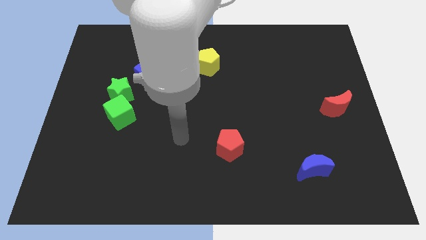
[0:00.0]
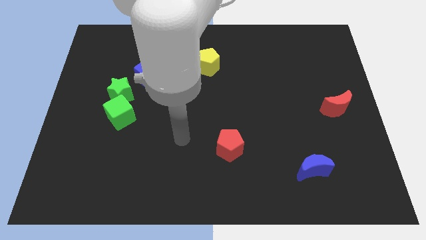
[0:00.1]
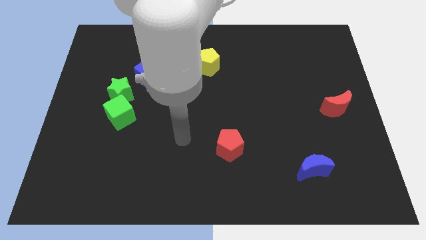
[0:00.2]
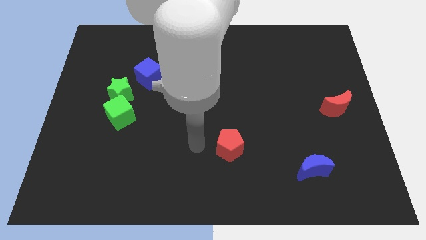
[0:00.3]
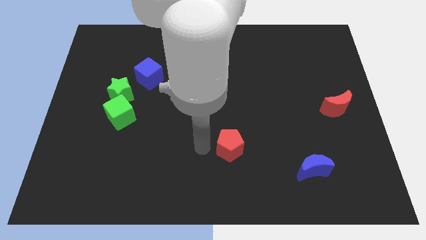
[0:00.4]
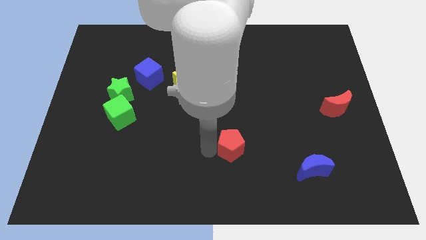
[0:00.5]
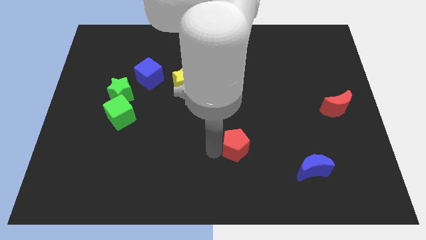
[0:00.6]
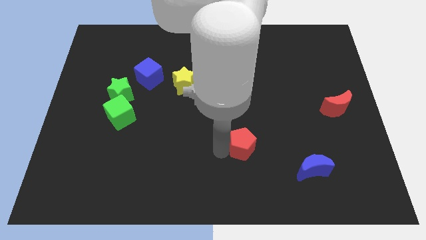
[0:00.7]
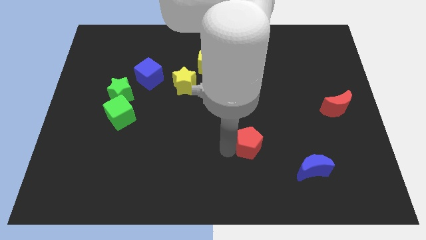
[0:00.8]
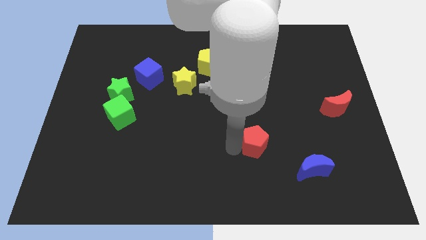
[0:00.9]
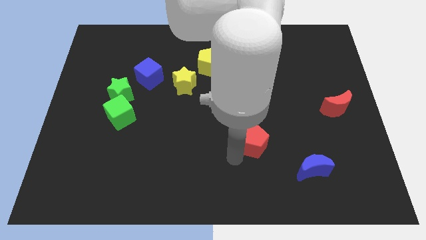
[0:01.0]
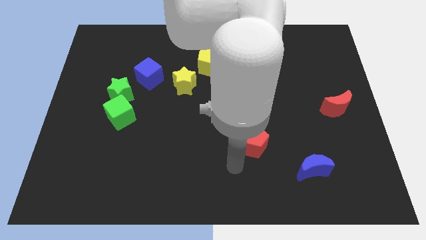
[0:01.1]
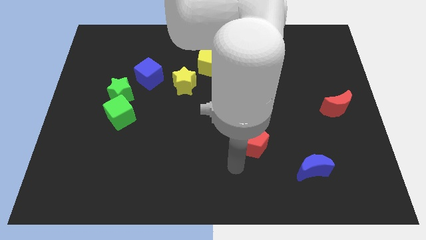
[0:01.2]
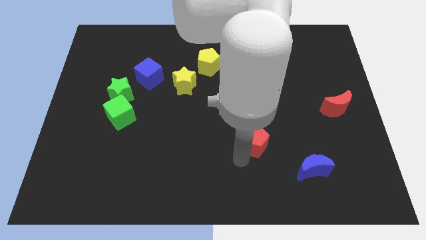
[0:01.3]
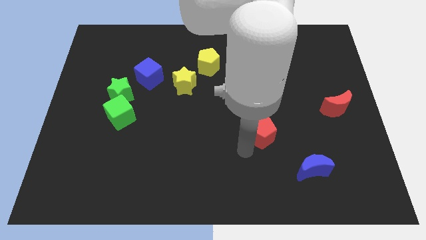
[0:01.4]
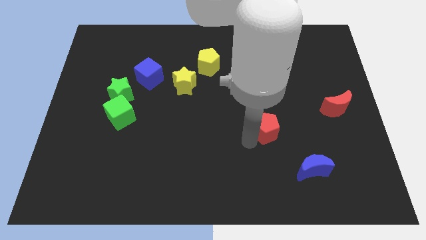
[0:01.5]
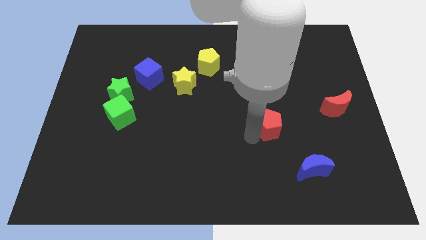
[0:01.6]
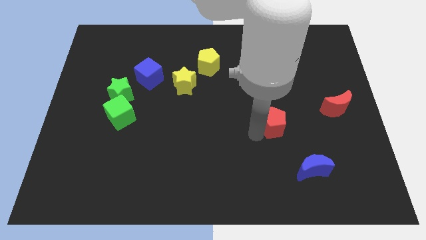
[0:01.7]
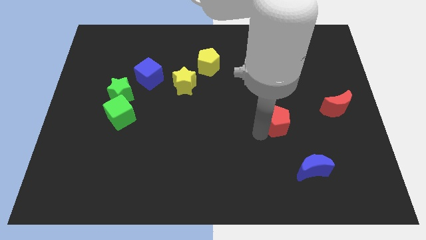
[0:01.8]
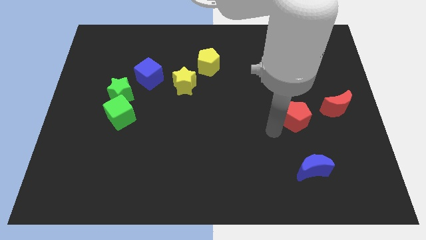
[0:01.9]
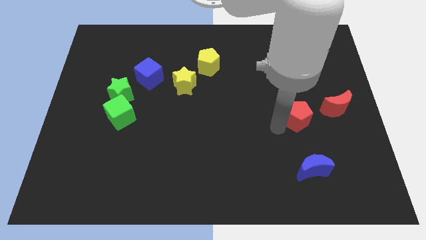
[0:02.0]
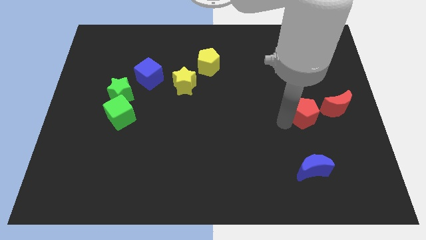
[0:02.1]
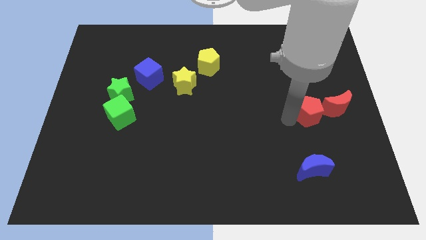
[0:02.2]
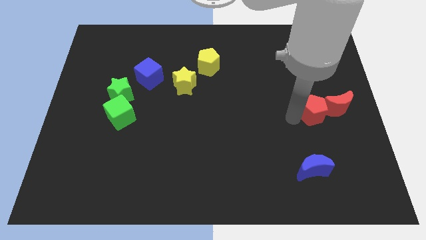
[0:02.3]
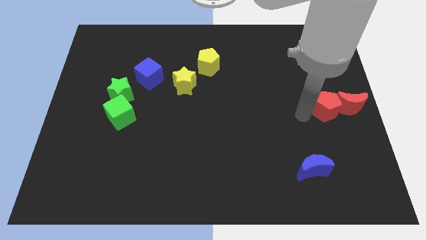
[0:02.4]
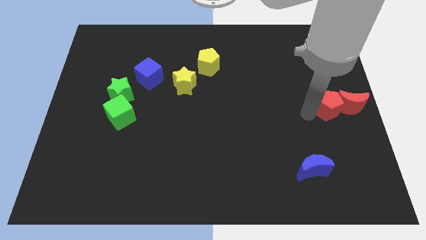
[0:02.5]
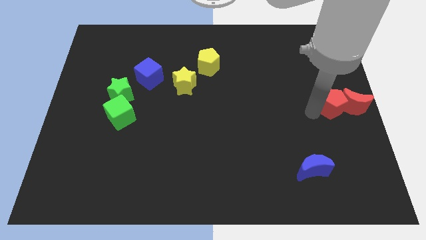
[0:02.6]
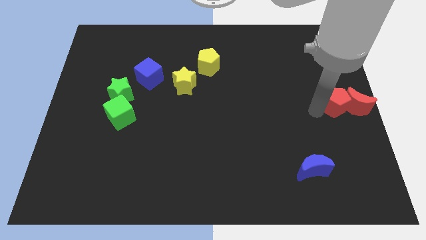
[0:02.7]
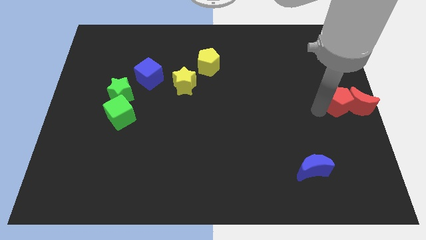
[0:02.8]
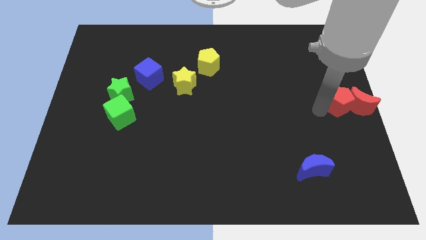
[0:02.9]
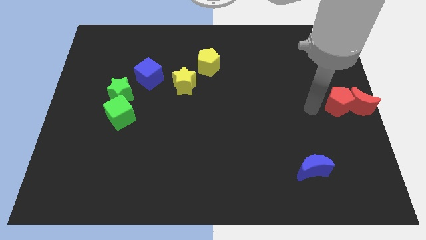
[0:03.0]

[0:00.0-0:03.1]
push the red blocks to the center right of the board

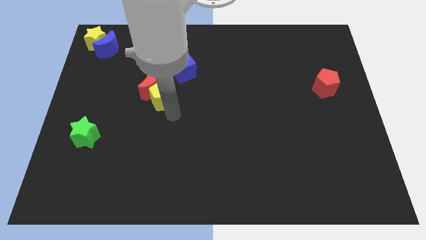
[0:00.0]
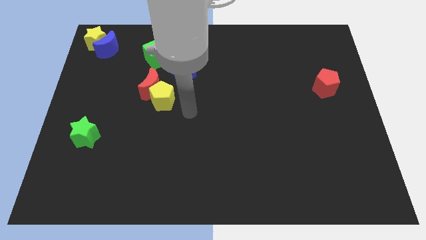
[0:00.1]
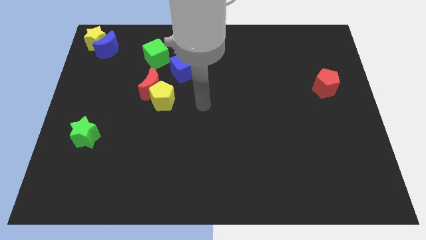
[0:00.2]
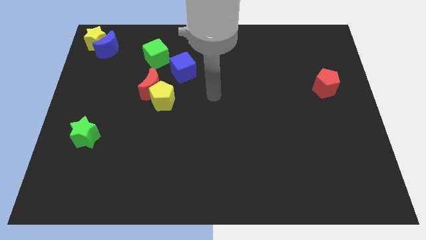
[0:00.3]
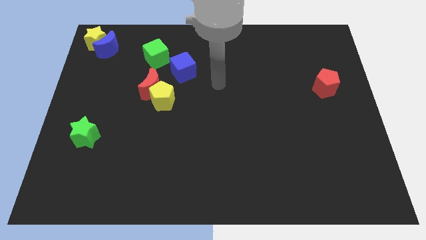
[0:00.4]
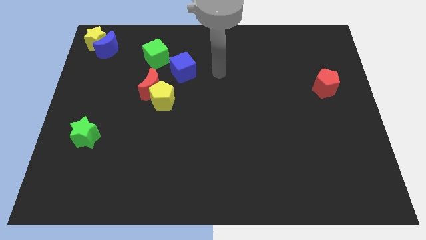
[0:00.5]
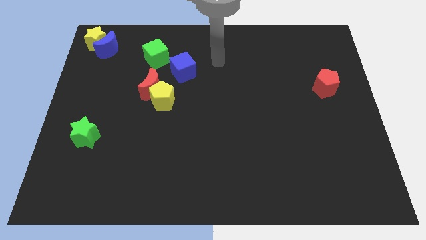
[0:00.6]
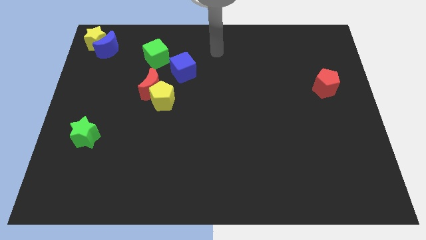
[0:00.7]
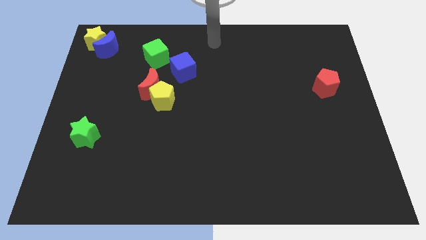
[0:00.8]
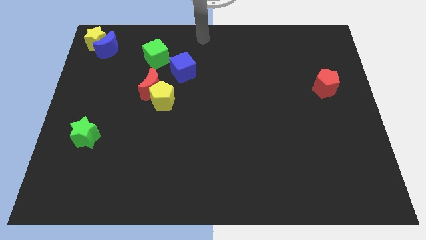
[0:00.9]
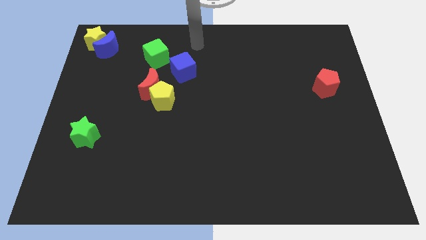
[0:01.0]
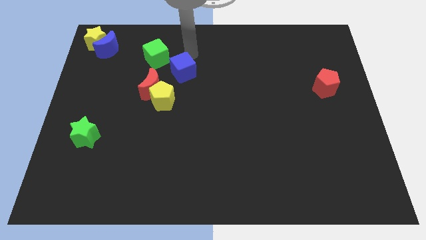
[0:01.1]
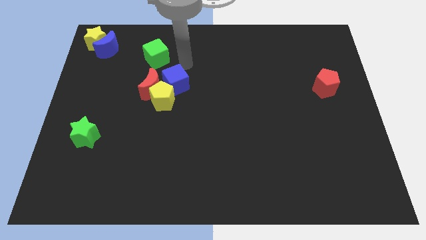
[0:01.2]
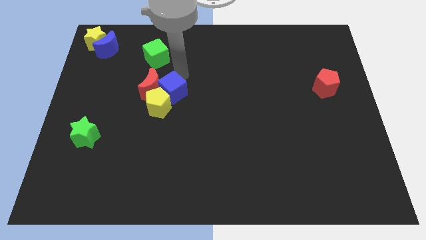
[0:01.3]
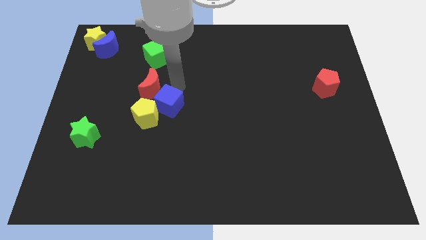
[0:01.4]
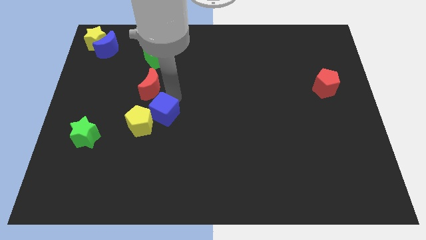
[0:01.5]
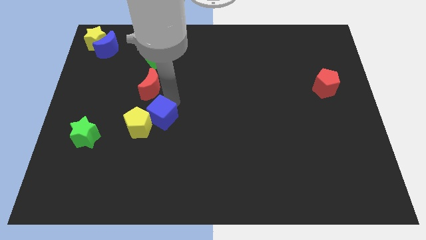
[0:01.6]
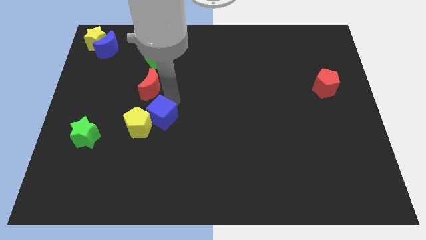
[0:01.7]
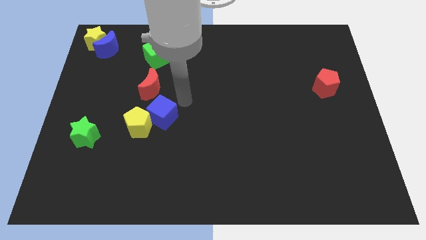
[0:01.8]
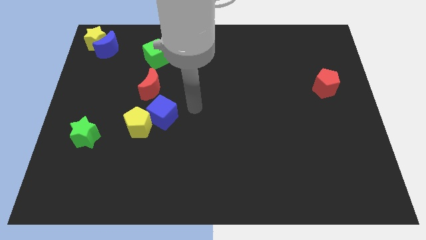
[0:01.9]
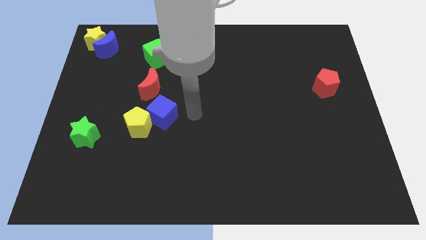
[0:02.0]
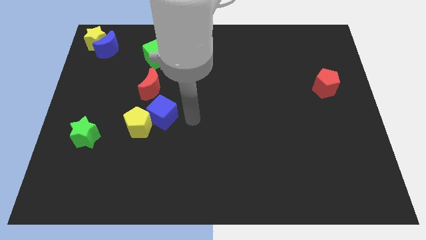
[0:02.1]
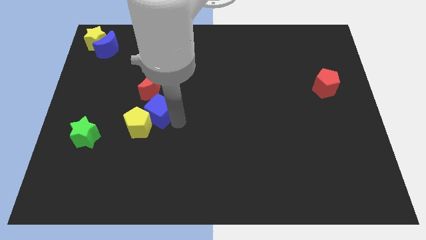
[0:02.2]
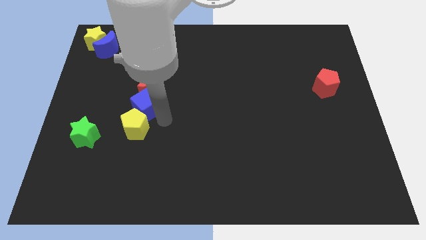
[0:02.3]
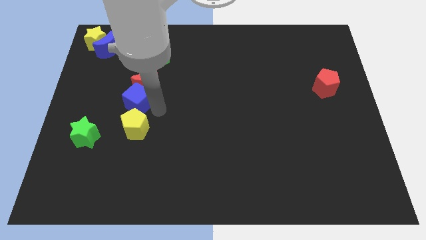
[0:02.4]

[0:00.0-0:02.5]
place the blue cube in between red moon and yellow pentagon

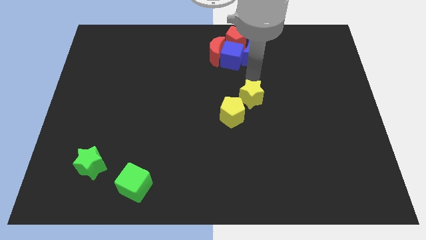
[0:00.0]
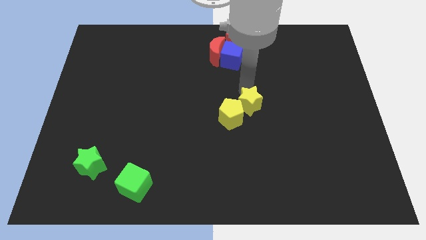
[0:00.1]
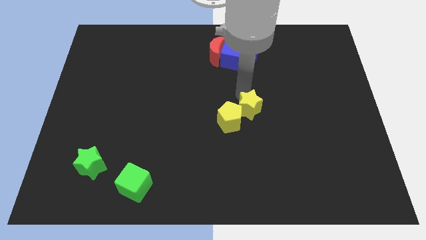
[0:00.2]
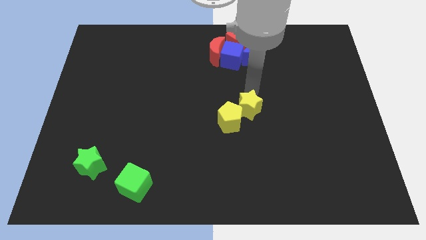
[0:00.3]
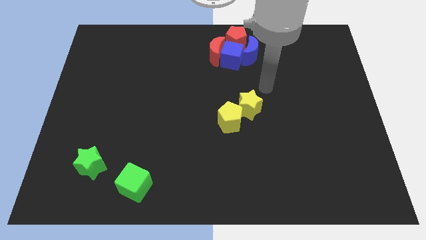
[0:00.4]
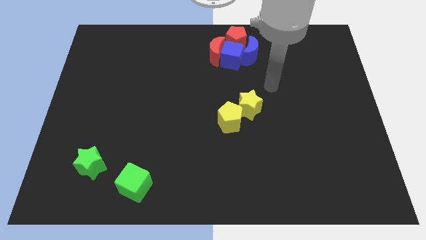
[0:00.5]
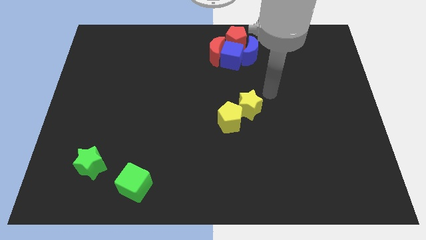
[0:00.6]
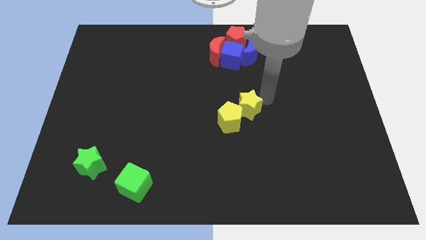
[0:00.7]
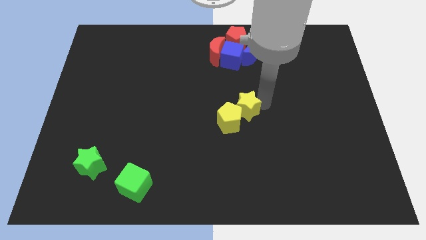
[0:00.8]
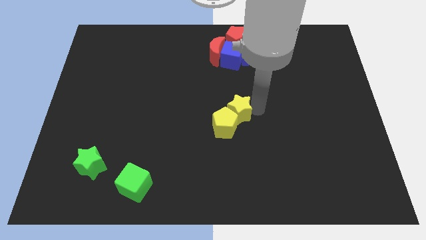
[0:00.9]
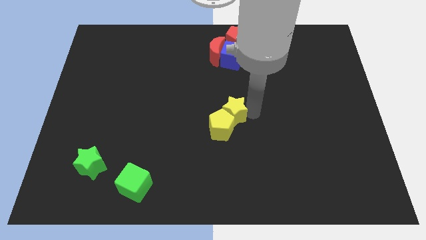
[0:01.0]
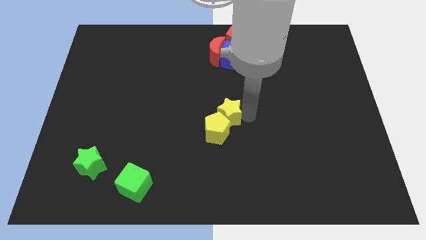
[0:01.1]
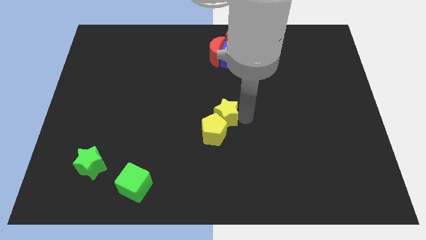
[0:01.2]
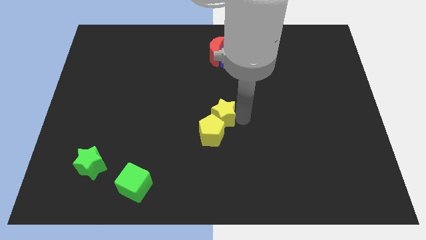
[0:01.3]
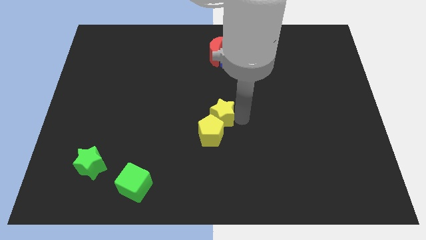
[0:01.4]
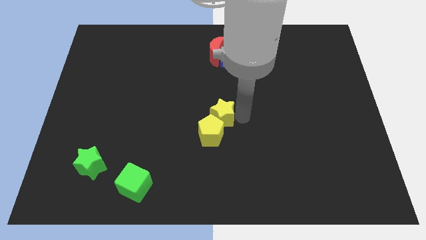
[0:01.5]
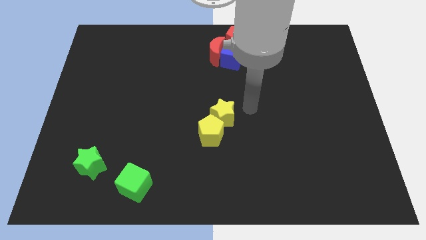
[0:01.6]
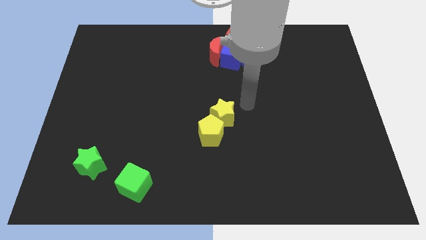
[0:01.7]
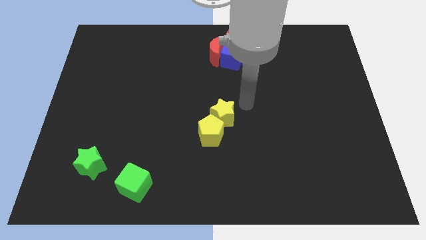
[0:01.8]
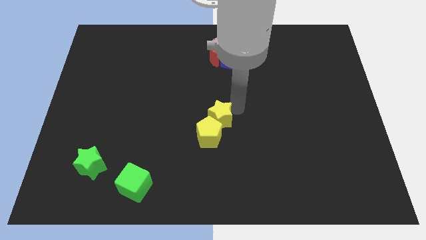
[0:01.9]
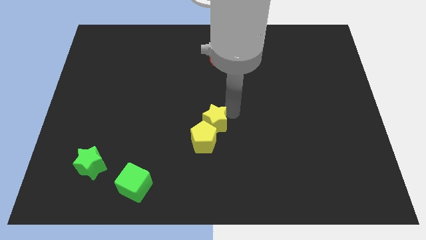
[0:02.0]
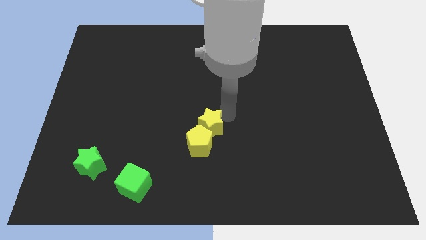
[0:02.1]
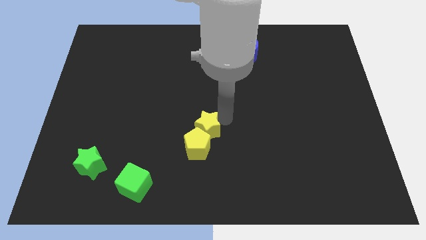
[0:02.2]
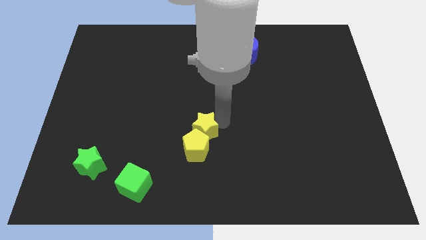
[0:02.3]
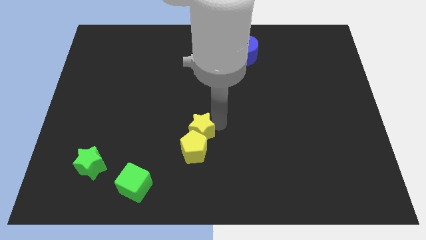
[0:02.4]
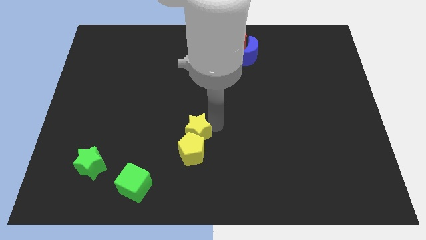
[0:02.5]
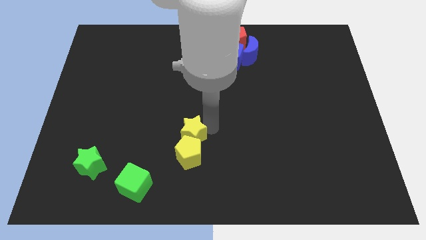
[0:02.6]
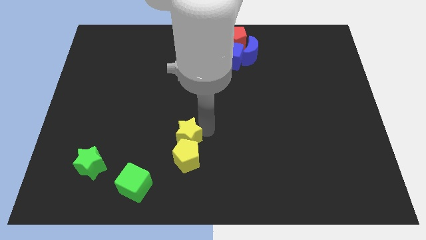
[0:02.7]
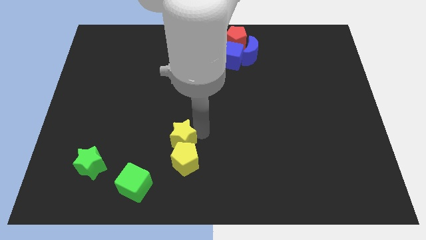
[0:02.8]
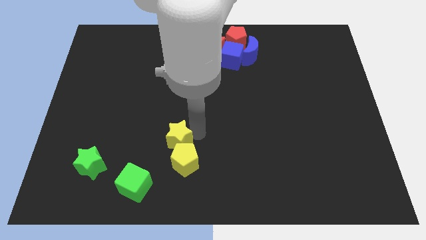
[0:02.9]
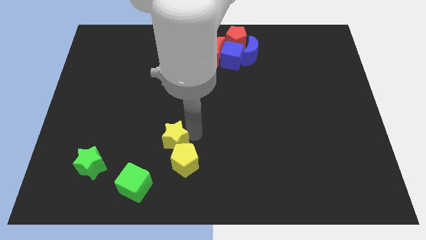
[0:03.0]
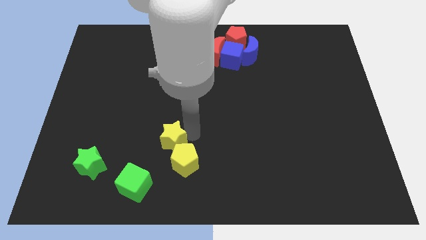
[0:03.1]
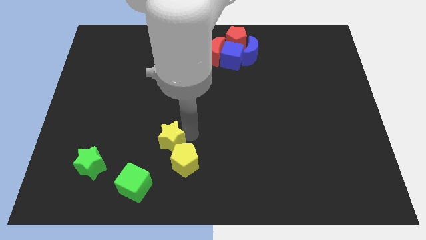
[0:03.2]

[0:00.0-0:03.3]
move yellow blocks towards green cube

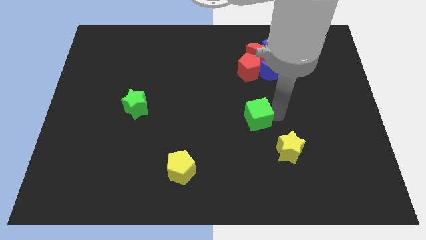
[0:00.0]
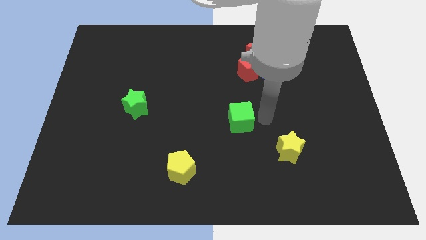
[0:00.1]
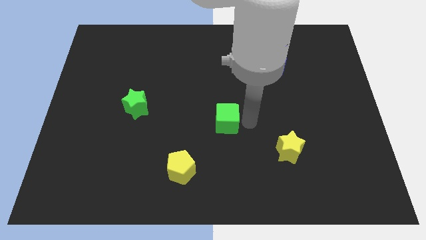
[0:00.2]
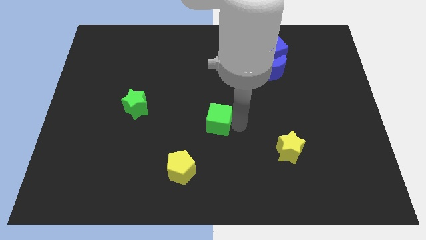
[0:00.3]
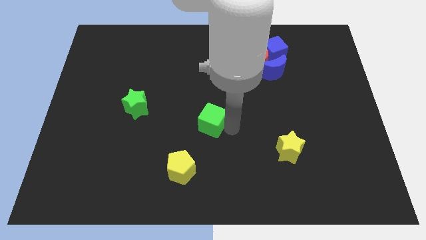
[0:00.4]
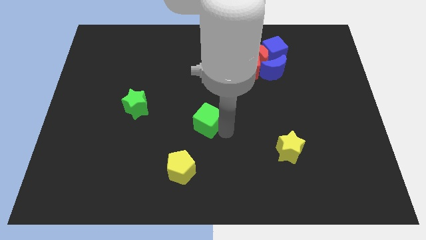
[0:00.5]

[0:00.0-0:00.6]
move the green cube to the center of the board
